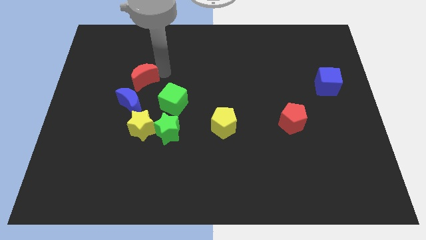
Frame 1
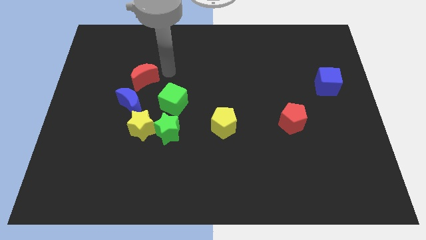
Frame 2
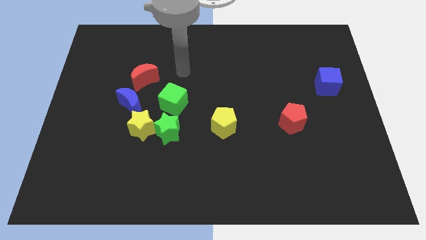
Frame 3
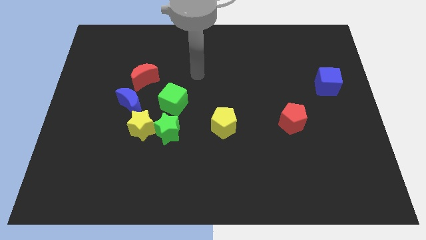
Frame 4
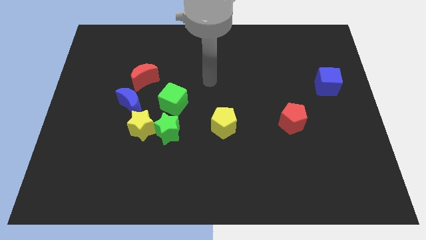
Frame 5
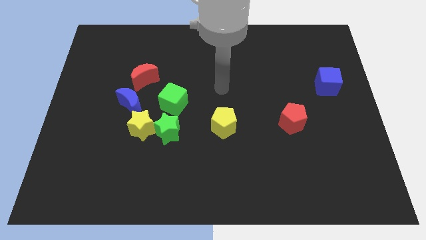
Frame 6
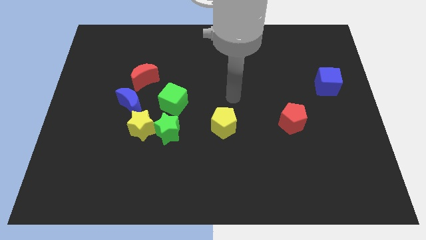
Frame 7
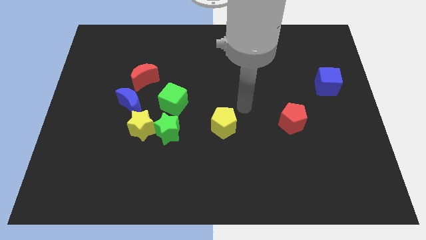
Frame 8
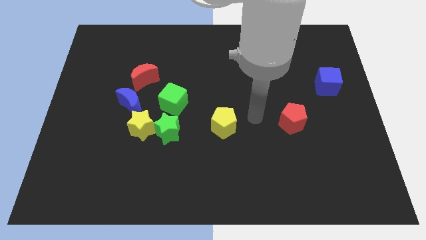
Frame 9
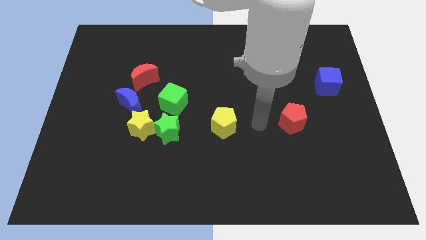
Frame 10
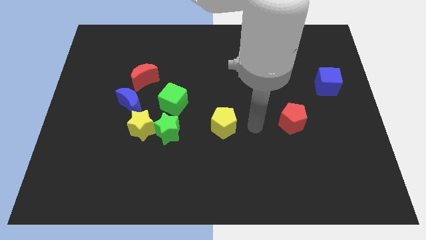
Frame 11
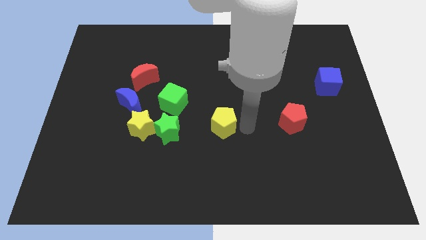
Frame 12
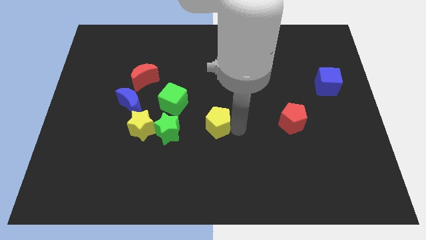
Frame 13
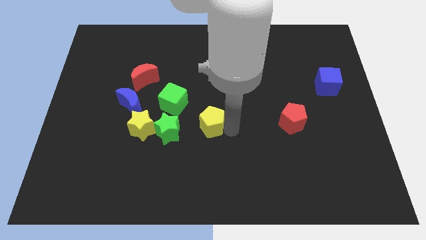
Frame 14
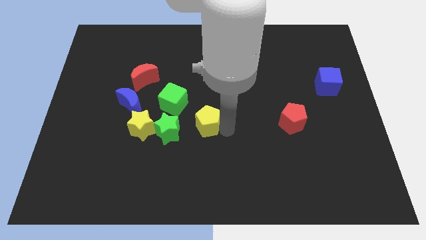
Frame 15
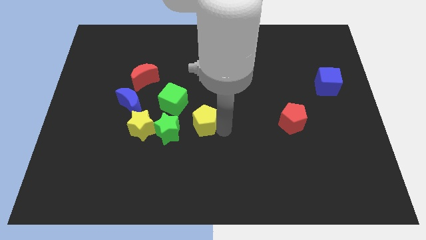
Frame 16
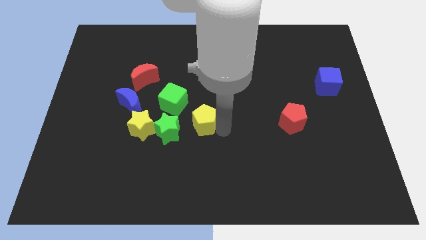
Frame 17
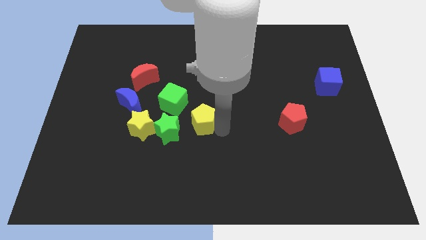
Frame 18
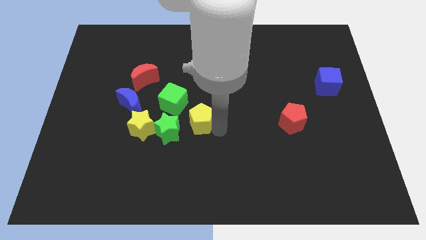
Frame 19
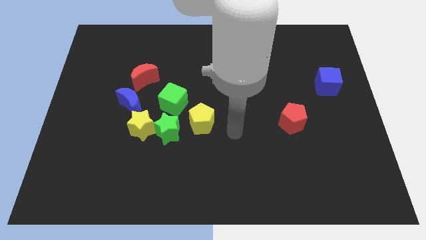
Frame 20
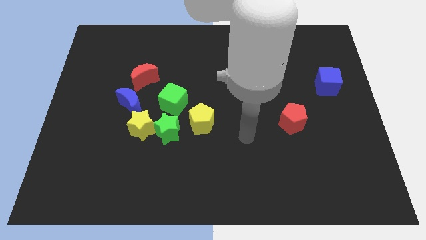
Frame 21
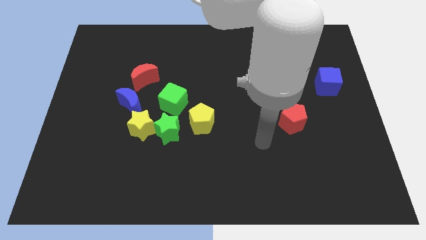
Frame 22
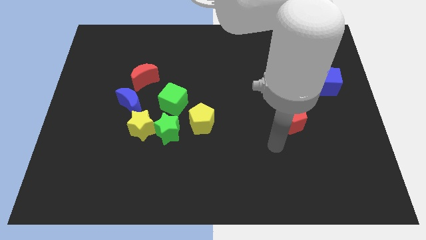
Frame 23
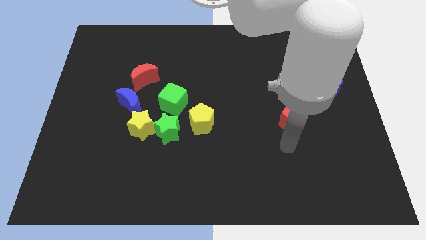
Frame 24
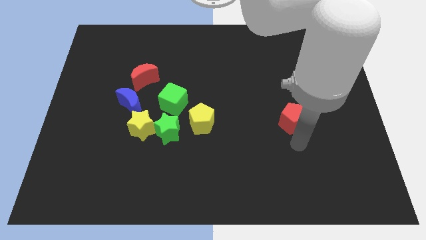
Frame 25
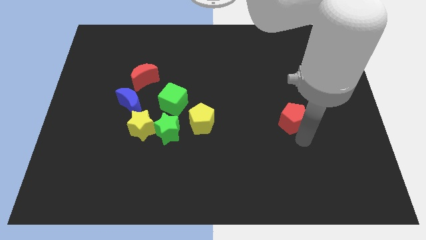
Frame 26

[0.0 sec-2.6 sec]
push the yellow pentagon towards the yellow blocks

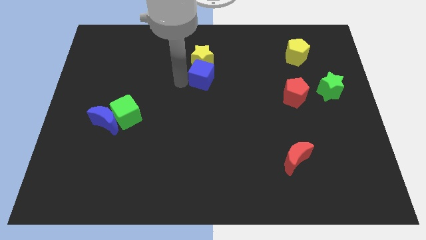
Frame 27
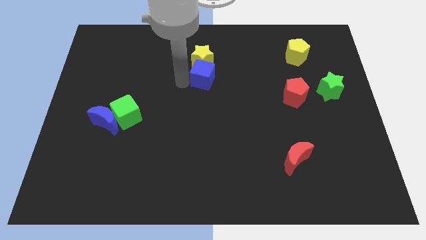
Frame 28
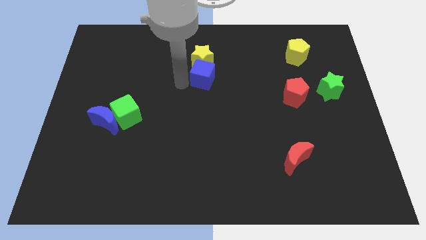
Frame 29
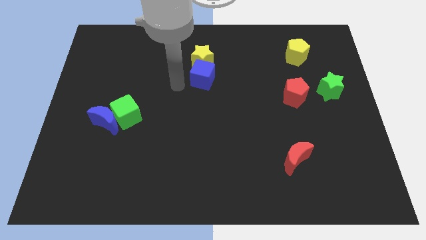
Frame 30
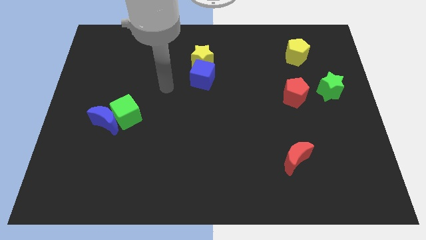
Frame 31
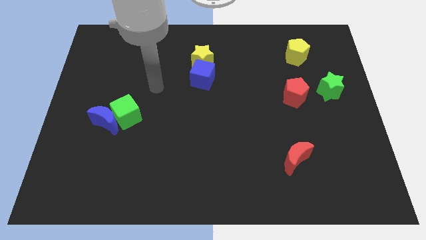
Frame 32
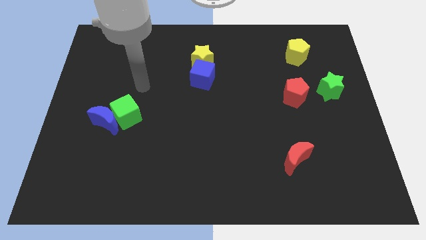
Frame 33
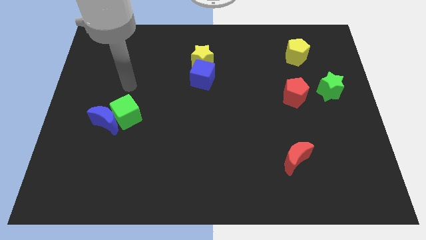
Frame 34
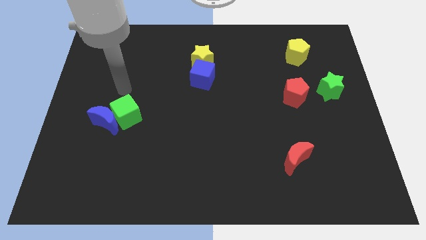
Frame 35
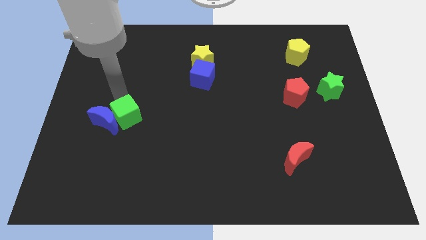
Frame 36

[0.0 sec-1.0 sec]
place your arm to the top of the green cube

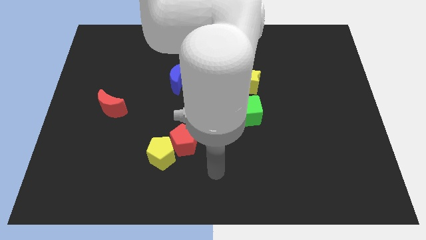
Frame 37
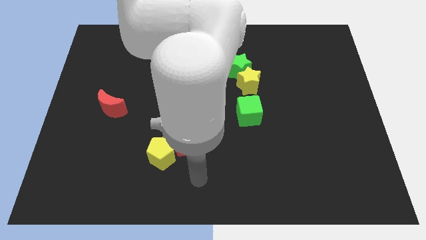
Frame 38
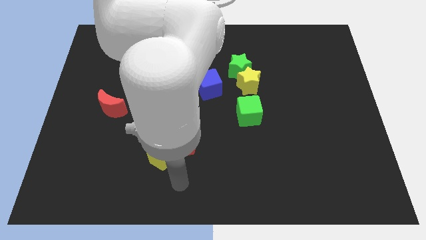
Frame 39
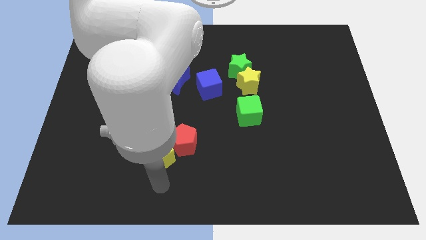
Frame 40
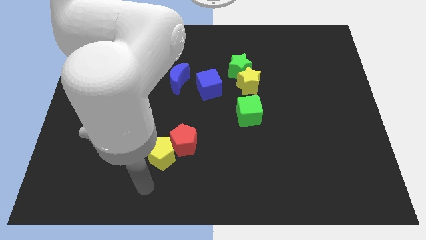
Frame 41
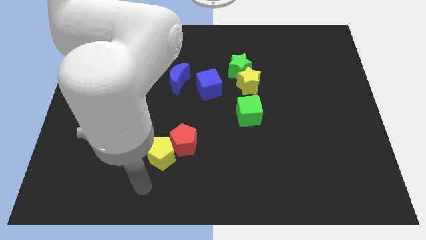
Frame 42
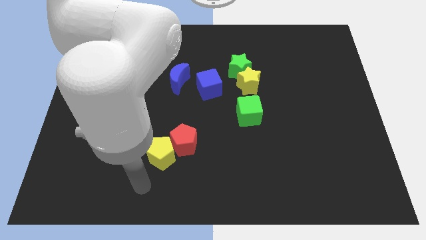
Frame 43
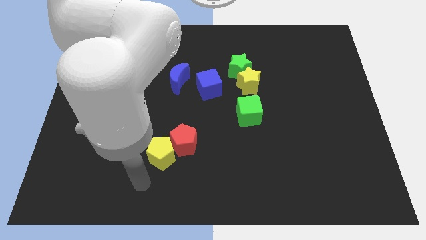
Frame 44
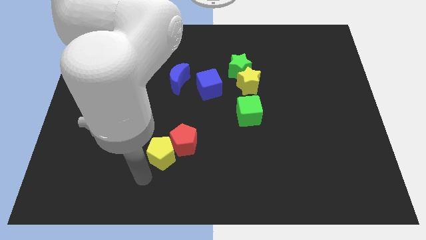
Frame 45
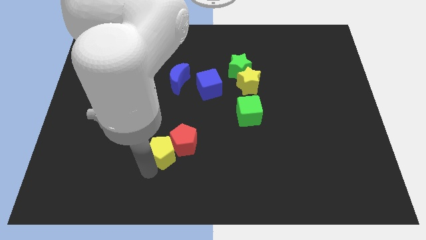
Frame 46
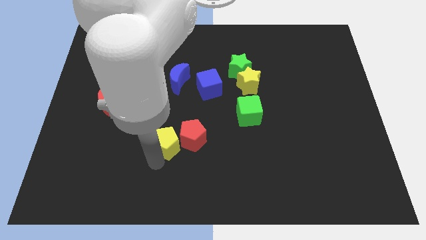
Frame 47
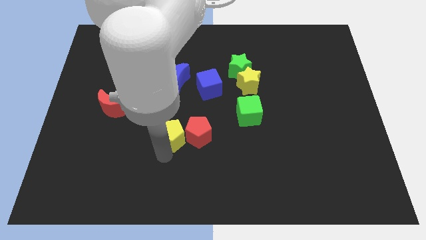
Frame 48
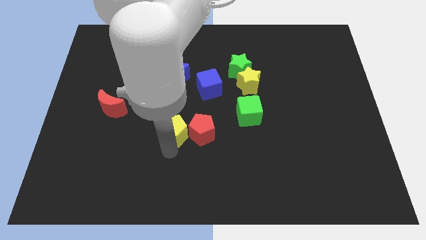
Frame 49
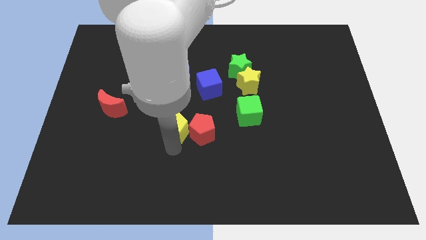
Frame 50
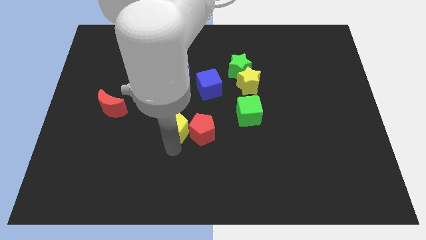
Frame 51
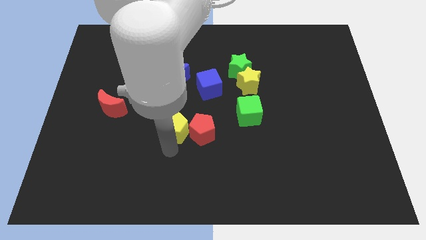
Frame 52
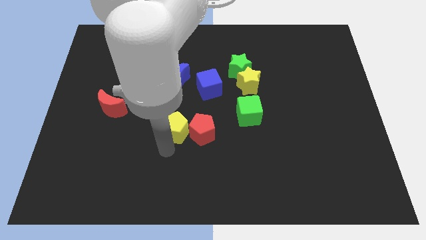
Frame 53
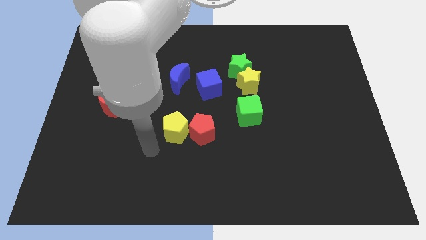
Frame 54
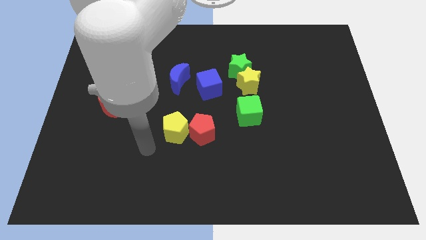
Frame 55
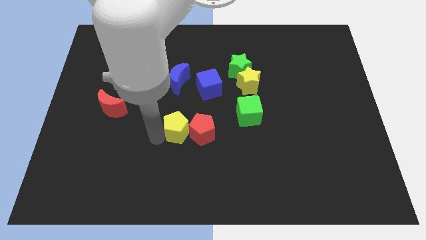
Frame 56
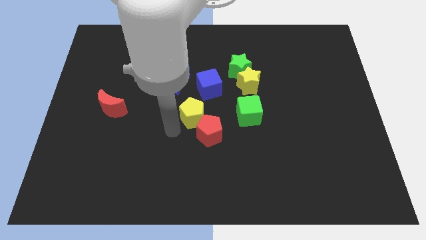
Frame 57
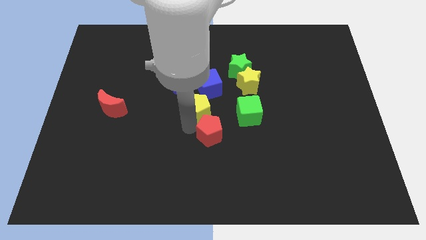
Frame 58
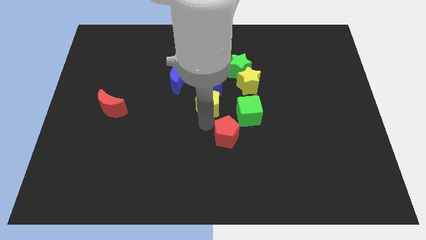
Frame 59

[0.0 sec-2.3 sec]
push yellow pentagon to the center of the board

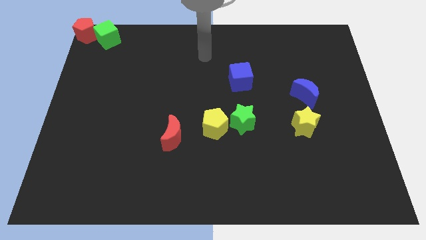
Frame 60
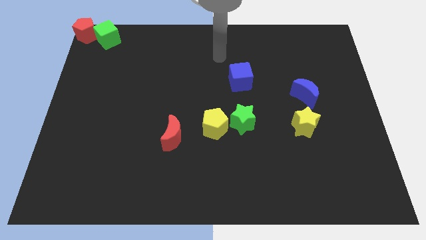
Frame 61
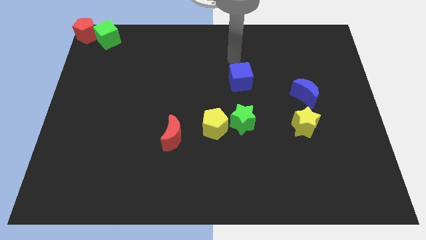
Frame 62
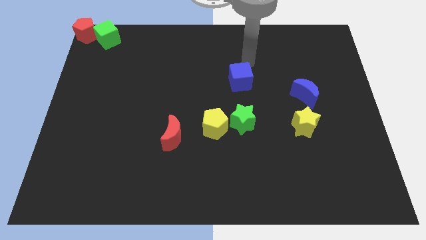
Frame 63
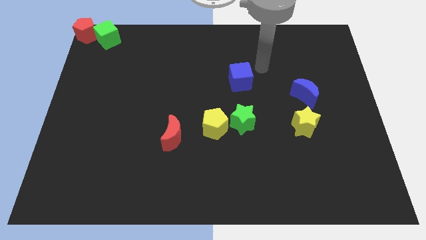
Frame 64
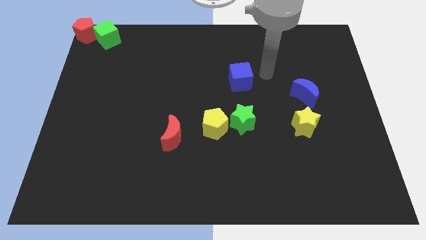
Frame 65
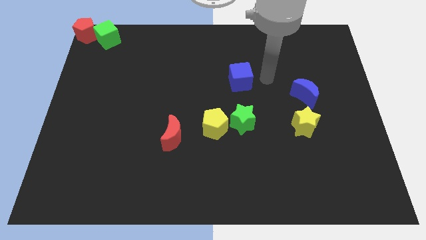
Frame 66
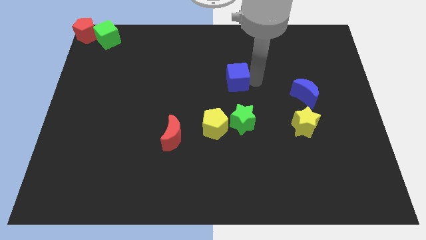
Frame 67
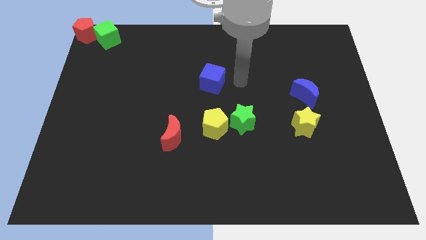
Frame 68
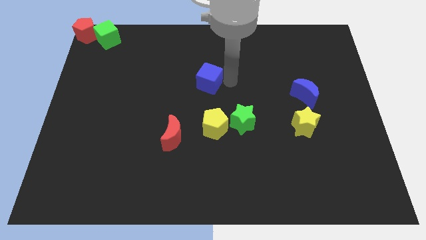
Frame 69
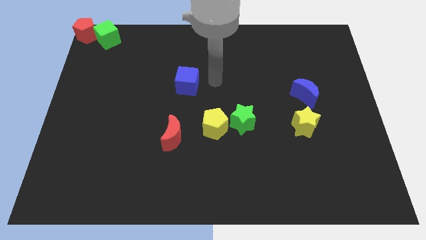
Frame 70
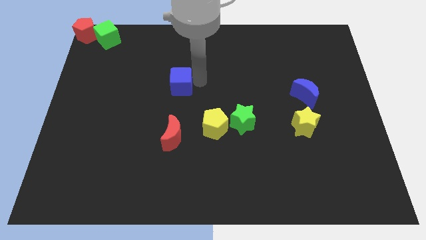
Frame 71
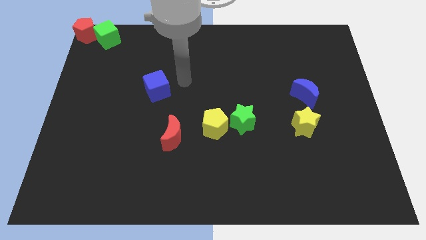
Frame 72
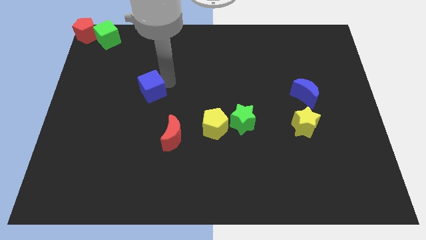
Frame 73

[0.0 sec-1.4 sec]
slide the blue cube to the top left side of the red moon

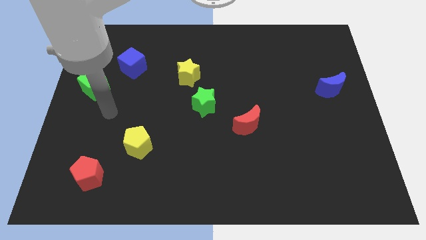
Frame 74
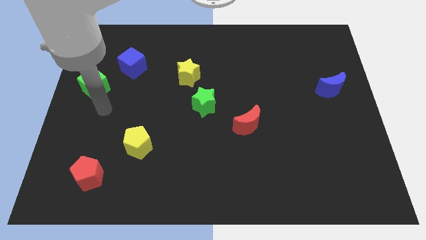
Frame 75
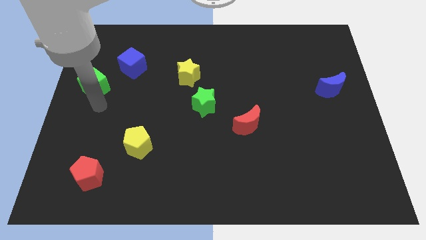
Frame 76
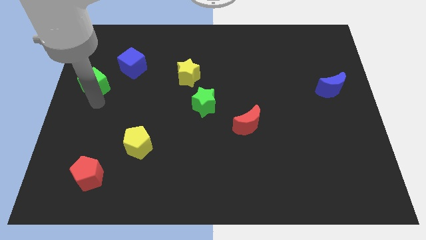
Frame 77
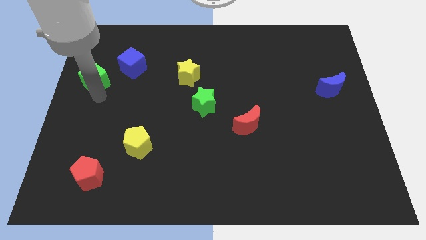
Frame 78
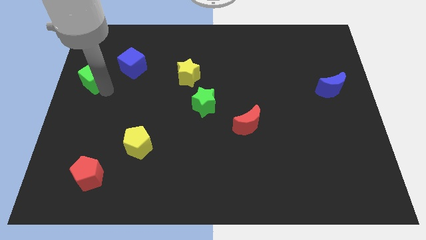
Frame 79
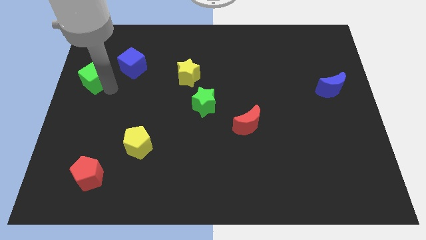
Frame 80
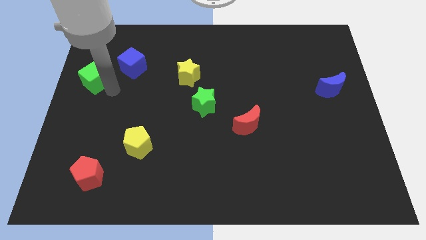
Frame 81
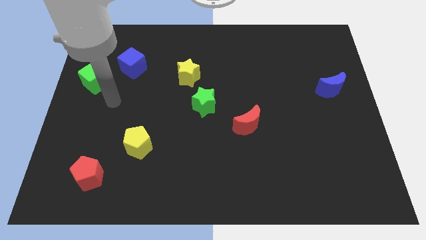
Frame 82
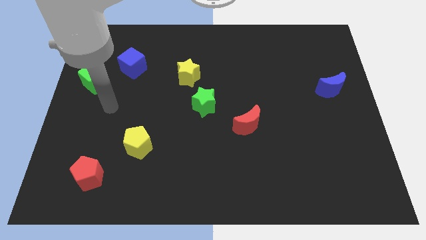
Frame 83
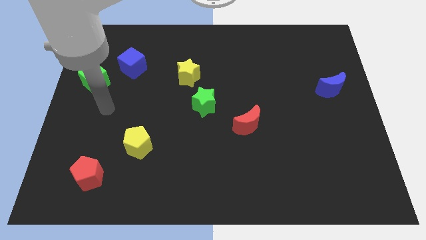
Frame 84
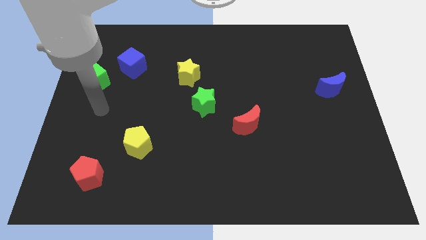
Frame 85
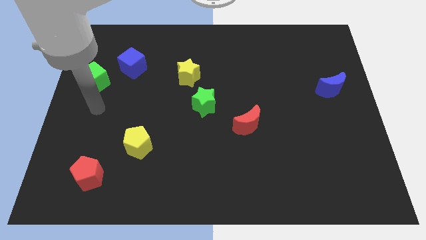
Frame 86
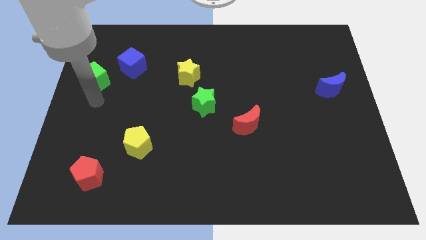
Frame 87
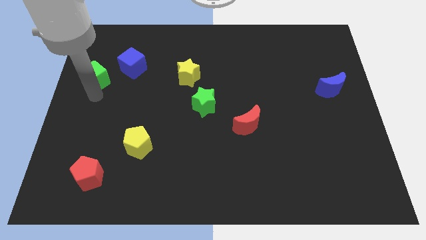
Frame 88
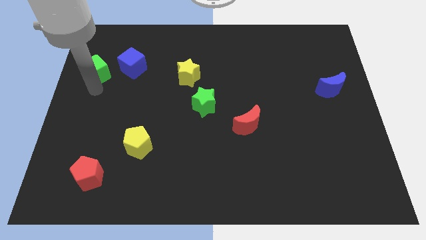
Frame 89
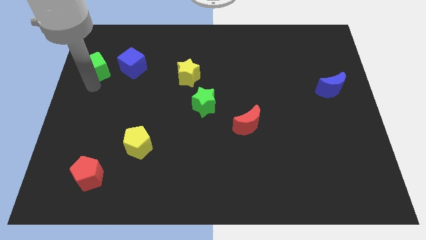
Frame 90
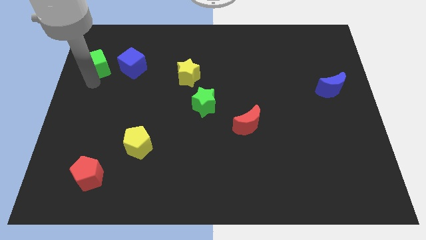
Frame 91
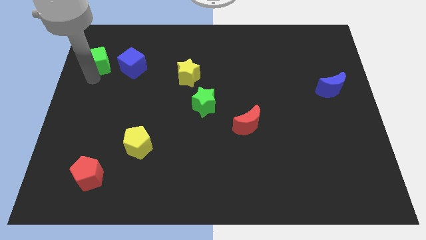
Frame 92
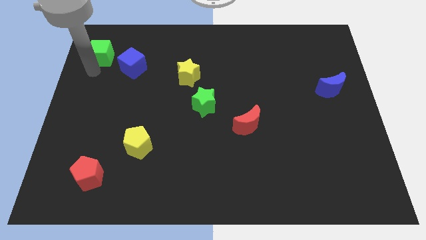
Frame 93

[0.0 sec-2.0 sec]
push the green cube to the left of the blue cube
